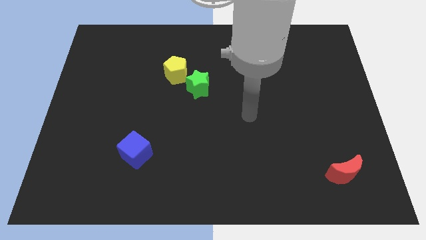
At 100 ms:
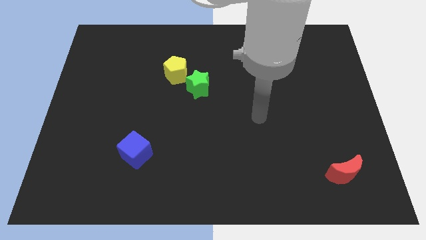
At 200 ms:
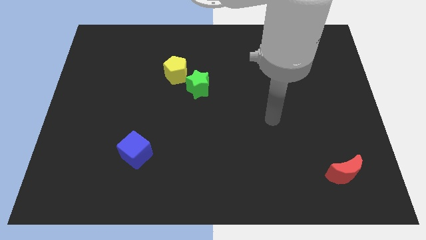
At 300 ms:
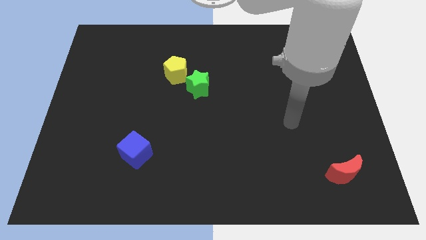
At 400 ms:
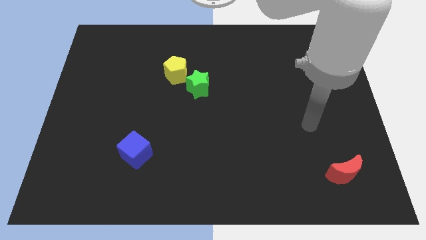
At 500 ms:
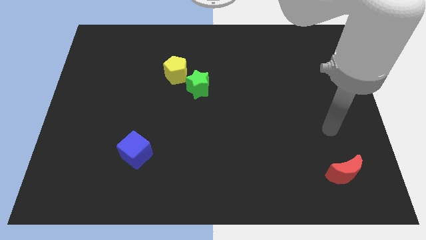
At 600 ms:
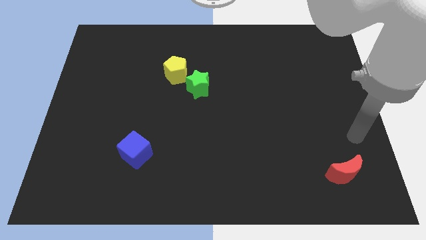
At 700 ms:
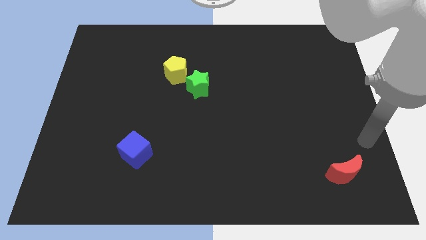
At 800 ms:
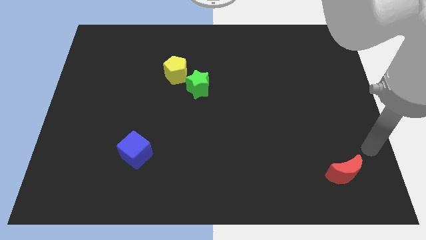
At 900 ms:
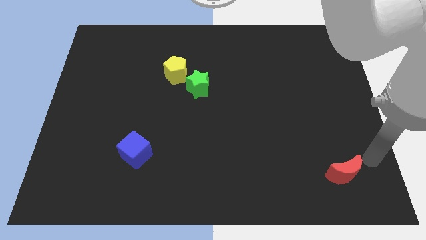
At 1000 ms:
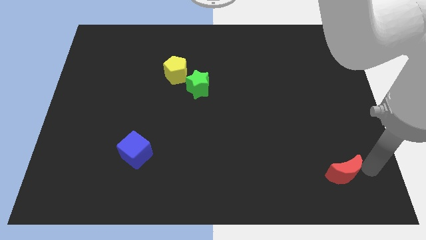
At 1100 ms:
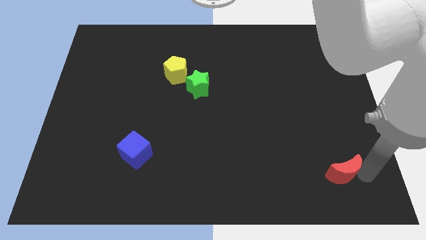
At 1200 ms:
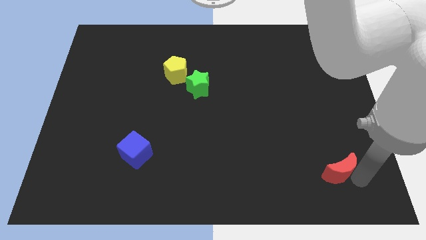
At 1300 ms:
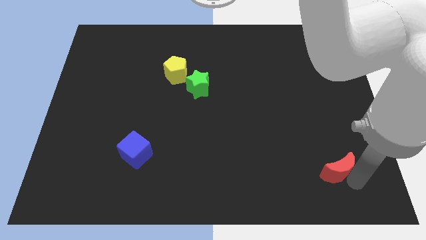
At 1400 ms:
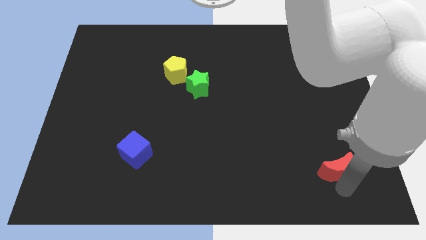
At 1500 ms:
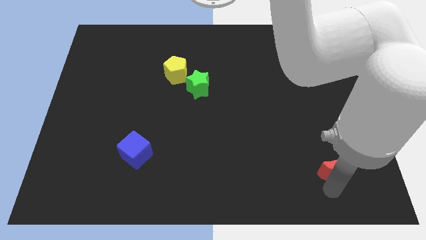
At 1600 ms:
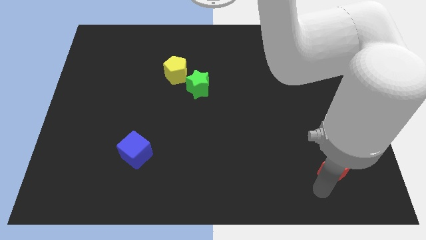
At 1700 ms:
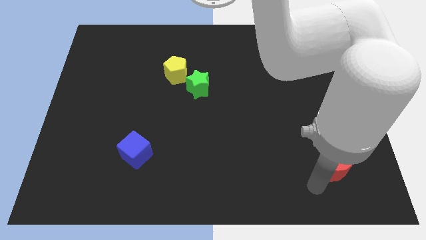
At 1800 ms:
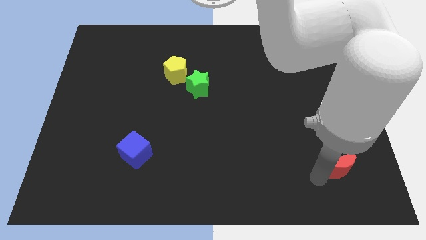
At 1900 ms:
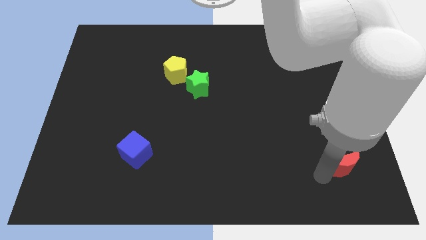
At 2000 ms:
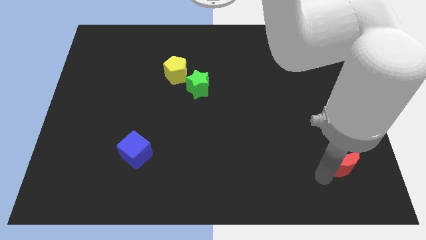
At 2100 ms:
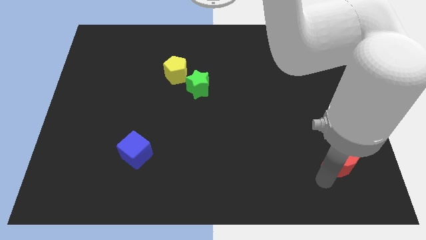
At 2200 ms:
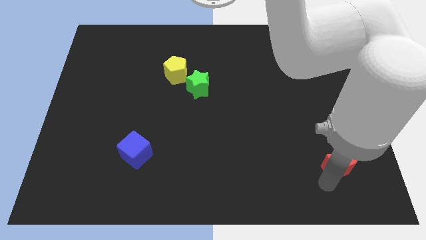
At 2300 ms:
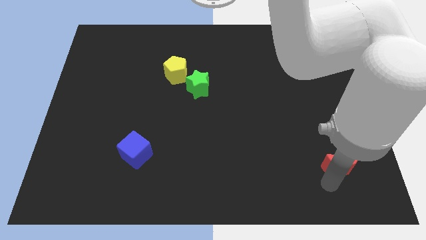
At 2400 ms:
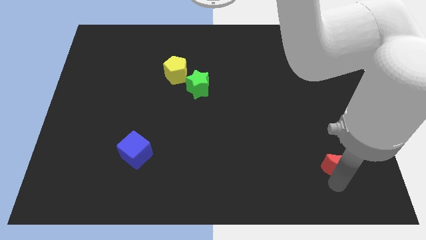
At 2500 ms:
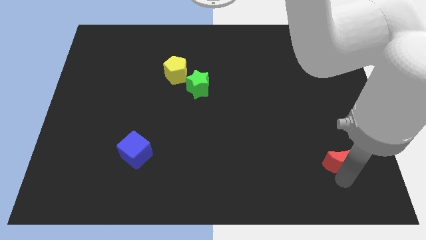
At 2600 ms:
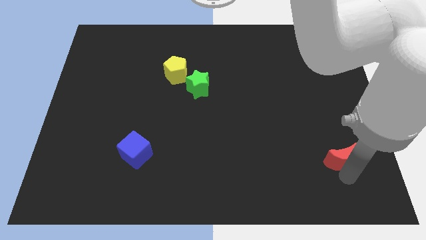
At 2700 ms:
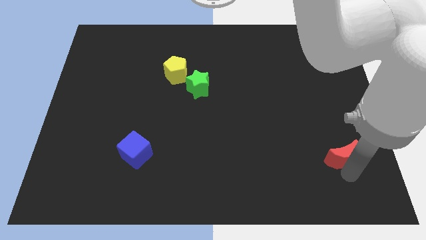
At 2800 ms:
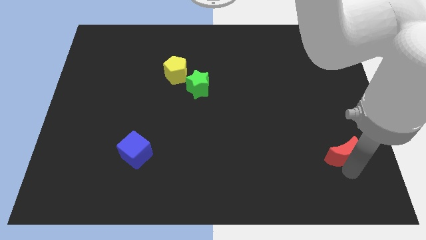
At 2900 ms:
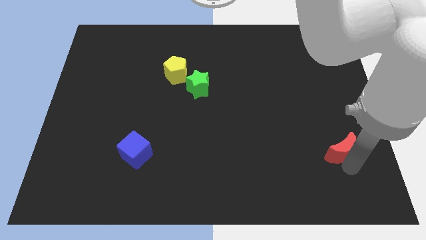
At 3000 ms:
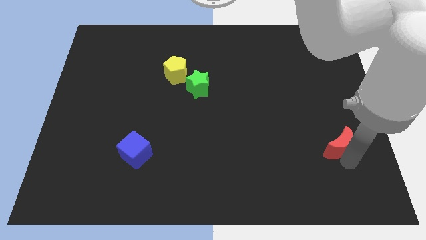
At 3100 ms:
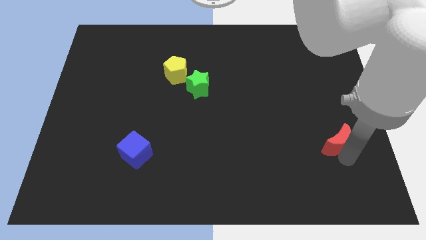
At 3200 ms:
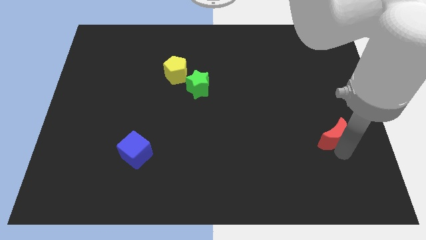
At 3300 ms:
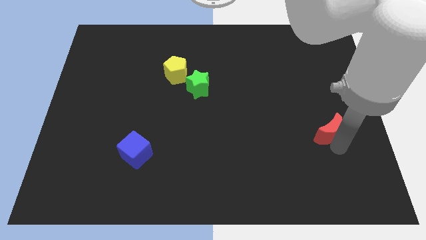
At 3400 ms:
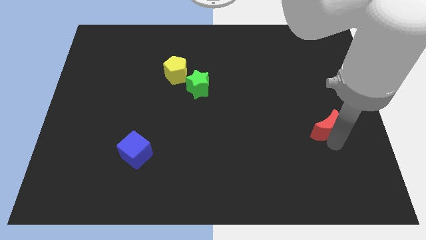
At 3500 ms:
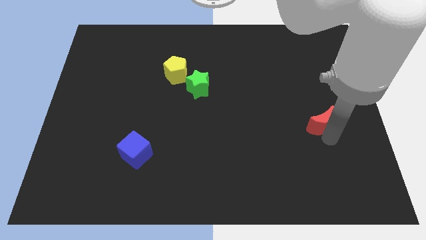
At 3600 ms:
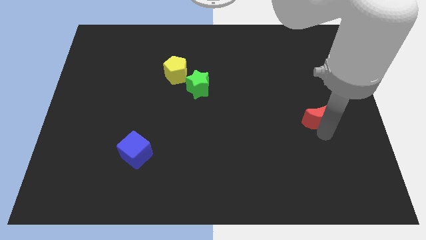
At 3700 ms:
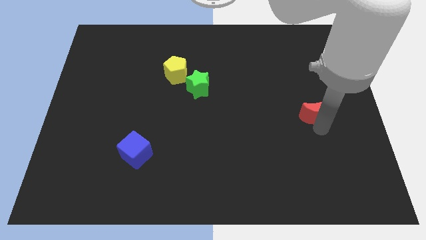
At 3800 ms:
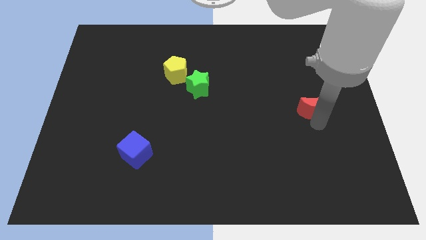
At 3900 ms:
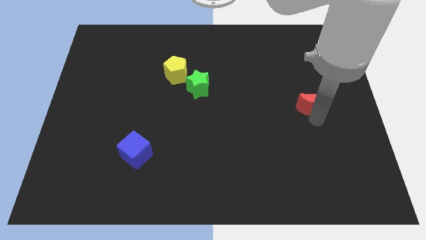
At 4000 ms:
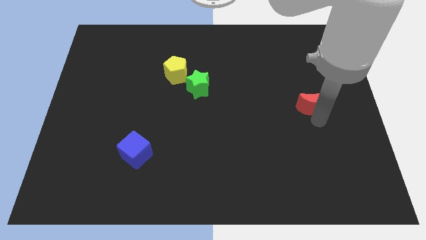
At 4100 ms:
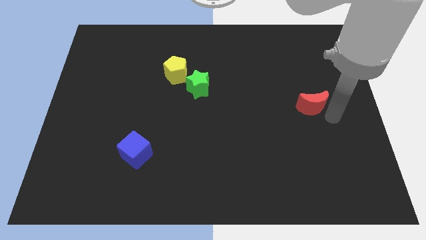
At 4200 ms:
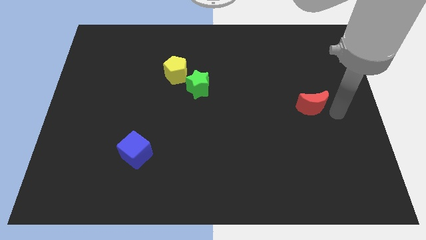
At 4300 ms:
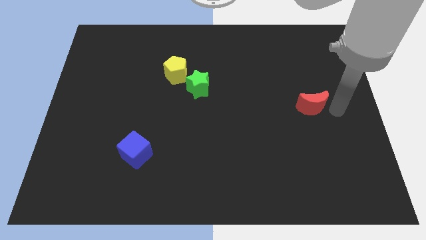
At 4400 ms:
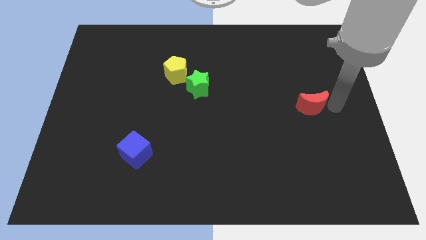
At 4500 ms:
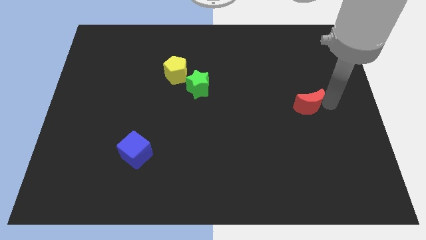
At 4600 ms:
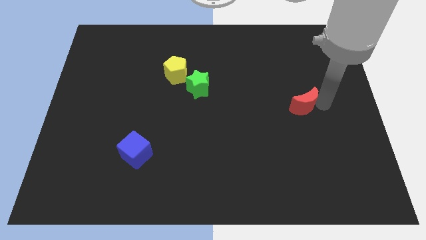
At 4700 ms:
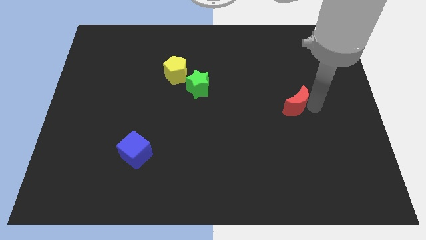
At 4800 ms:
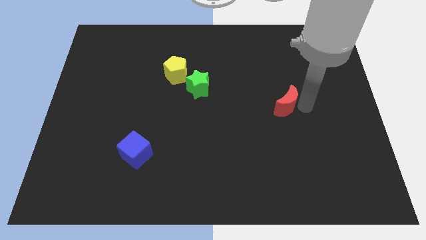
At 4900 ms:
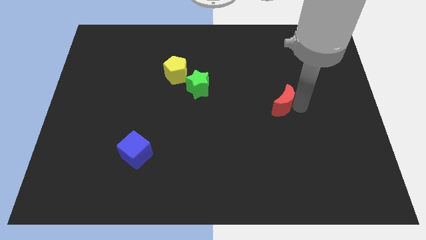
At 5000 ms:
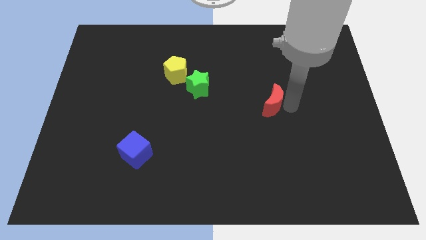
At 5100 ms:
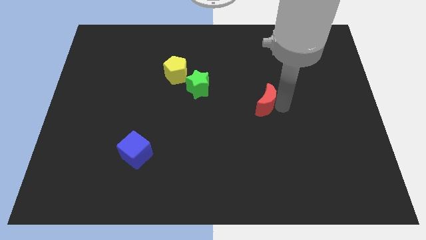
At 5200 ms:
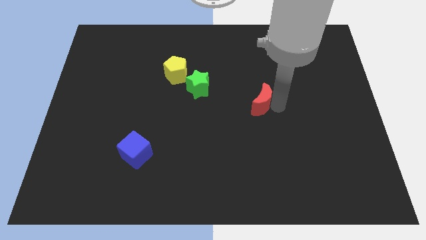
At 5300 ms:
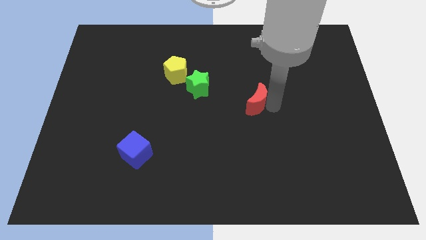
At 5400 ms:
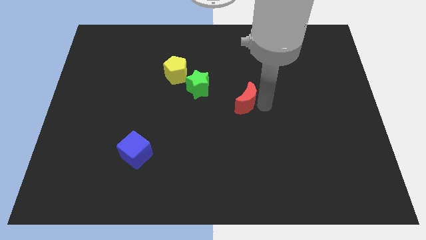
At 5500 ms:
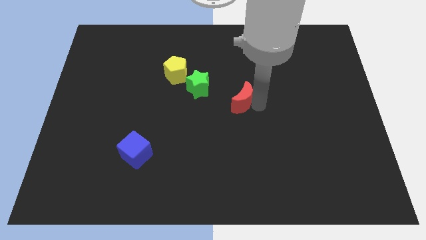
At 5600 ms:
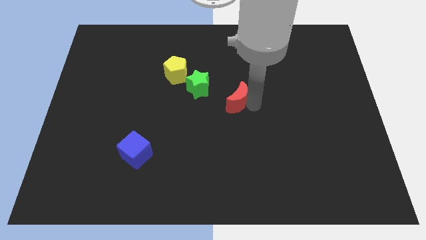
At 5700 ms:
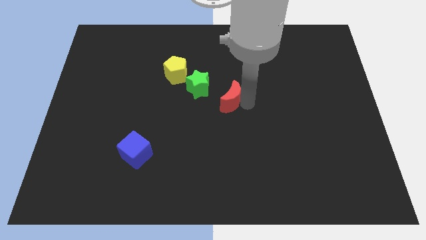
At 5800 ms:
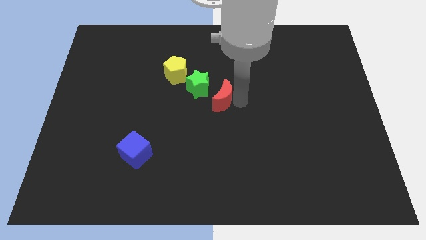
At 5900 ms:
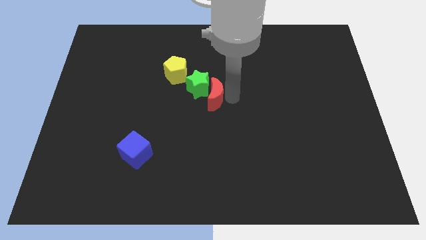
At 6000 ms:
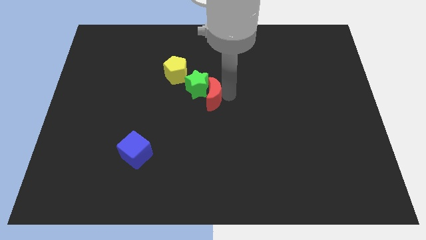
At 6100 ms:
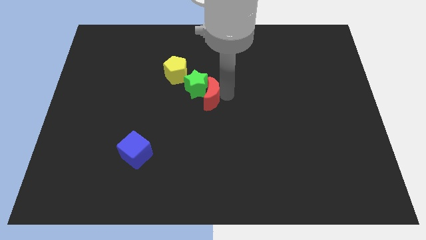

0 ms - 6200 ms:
put the moon close to the green block

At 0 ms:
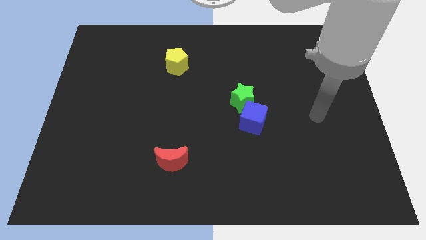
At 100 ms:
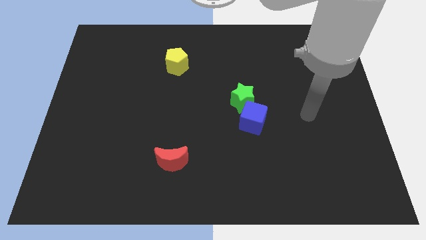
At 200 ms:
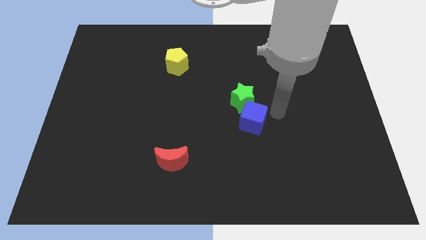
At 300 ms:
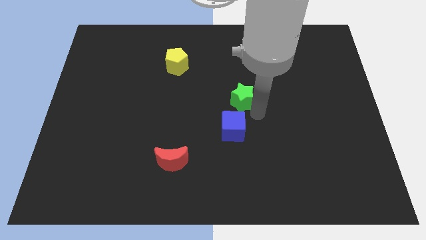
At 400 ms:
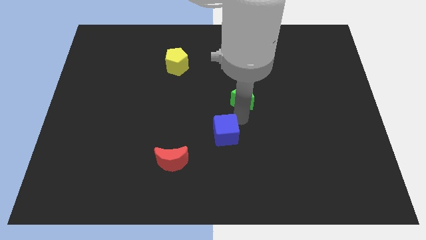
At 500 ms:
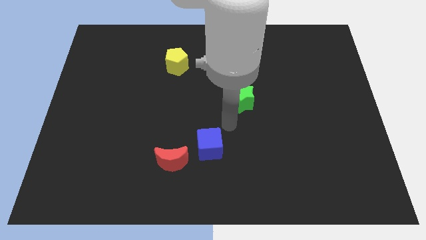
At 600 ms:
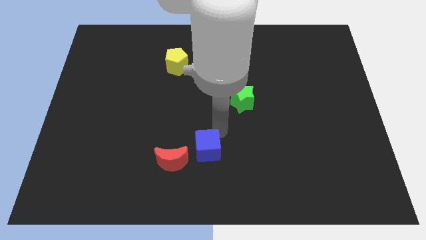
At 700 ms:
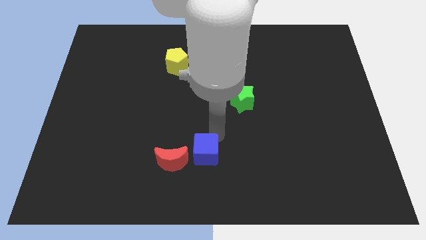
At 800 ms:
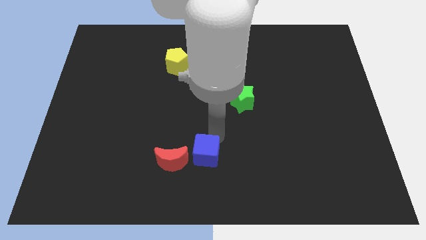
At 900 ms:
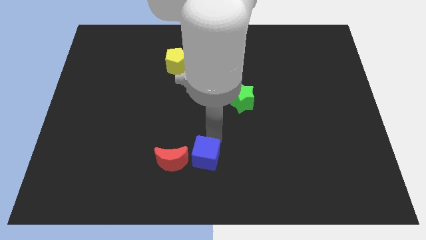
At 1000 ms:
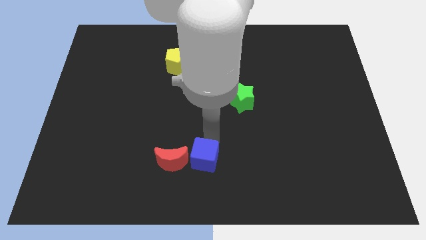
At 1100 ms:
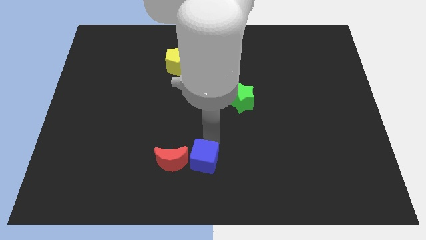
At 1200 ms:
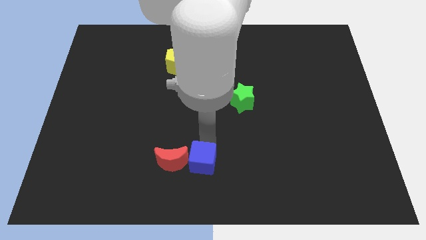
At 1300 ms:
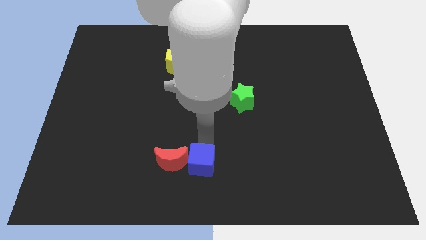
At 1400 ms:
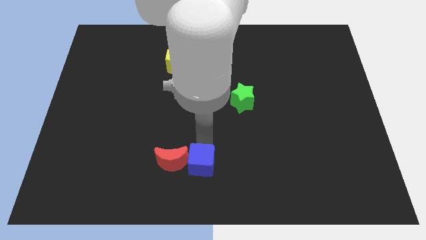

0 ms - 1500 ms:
put the blue block towards the red moon

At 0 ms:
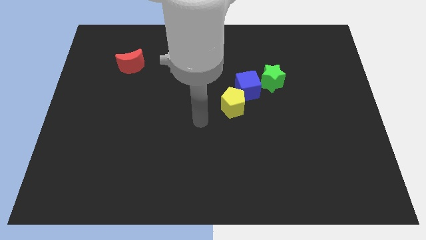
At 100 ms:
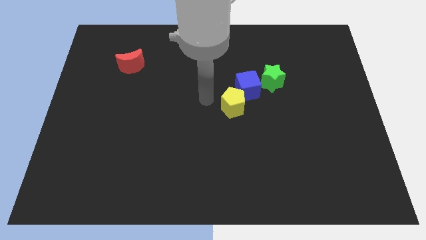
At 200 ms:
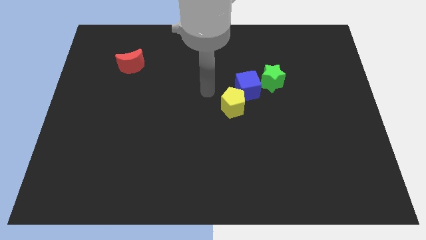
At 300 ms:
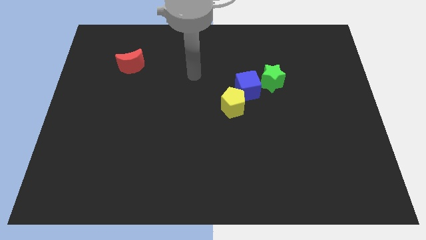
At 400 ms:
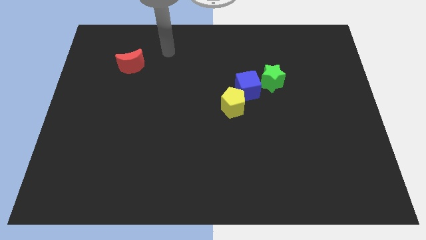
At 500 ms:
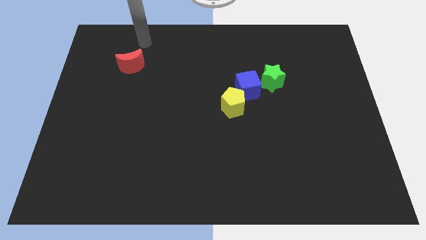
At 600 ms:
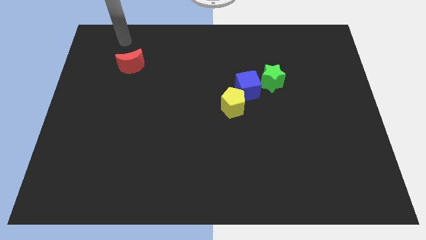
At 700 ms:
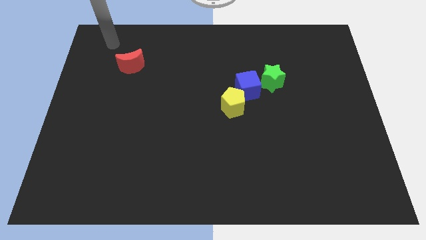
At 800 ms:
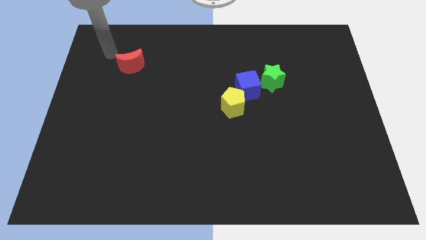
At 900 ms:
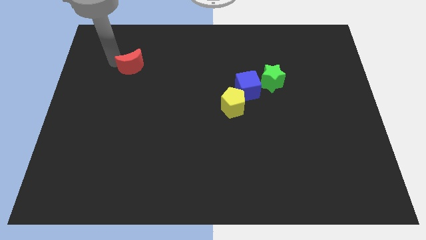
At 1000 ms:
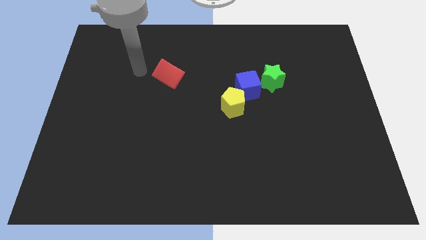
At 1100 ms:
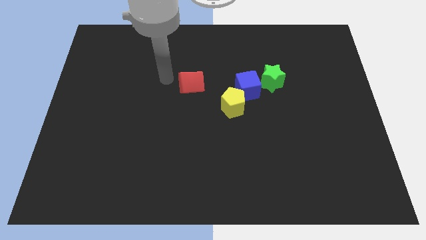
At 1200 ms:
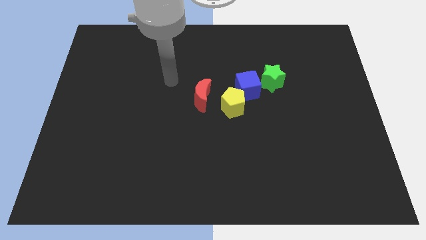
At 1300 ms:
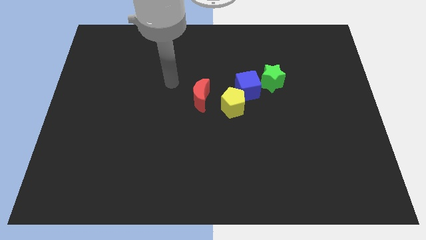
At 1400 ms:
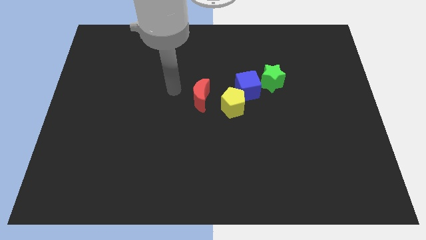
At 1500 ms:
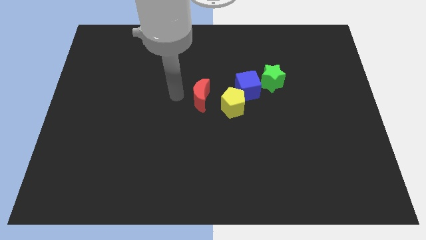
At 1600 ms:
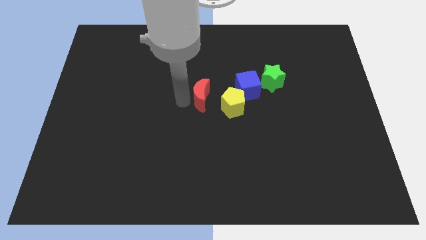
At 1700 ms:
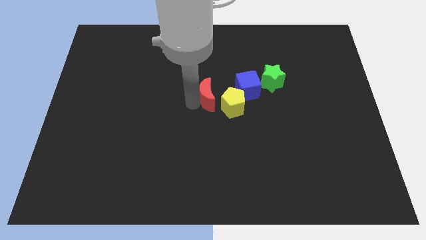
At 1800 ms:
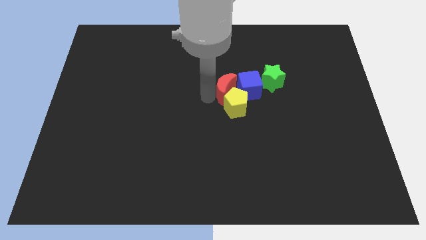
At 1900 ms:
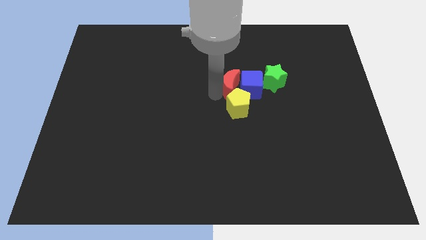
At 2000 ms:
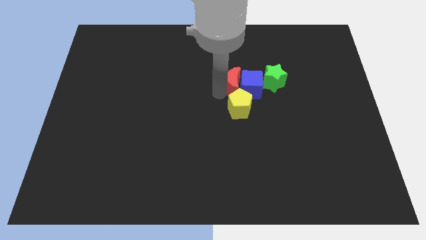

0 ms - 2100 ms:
move the moon close to the cube
